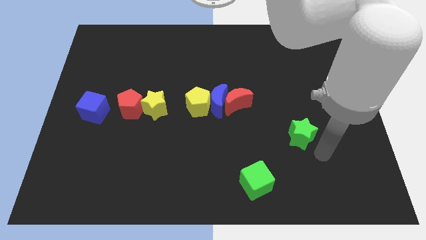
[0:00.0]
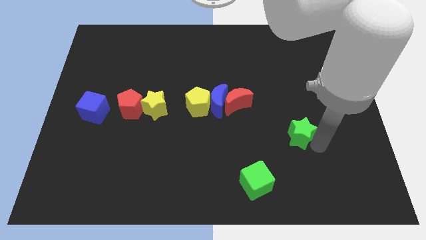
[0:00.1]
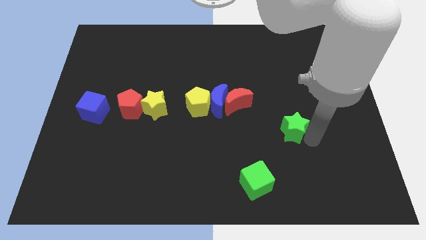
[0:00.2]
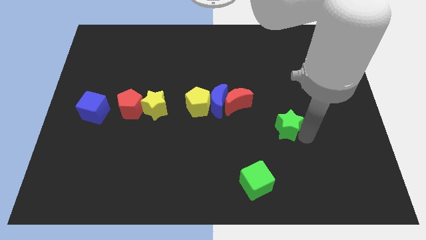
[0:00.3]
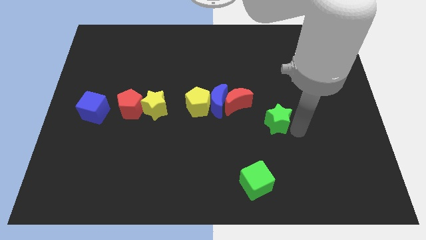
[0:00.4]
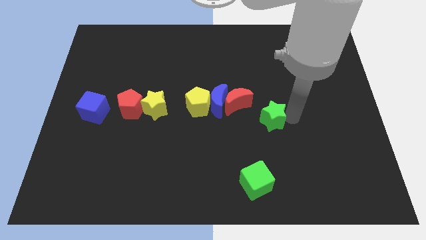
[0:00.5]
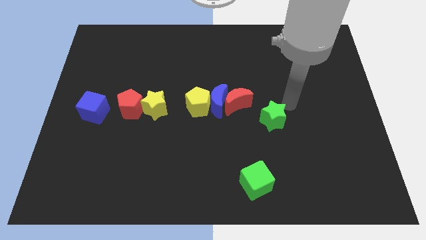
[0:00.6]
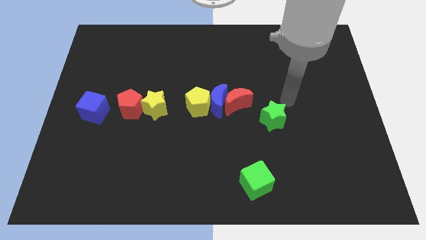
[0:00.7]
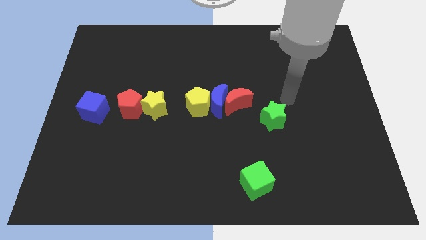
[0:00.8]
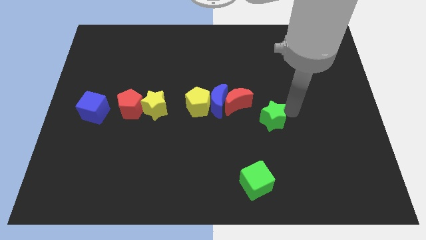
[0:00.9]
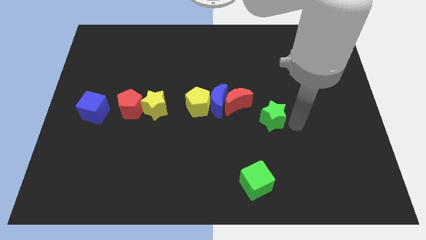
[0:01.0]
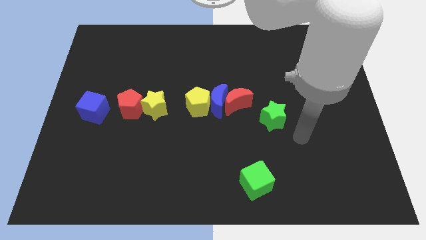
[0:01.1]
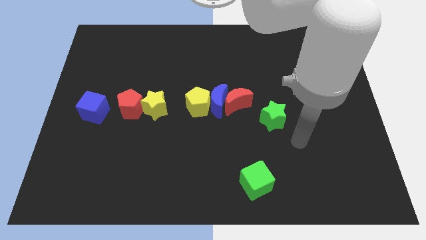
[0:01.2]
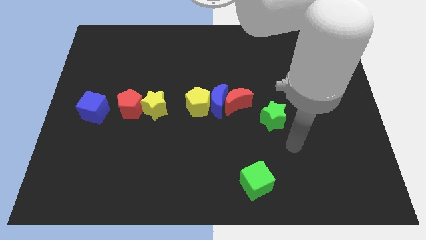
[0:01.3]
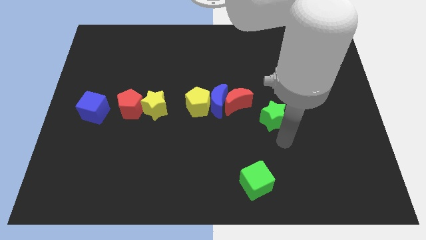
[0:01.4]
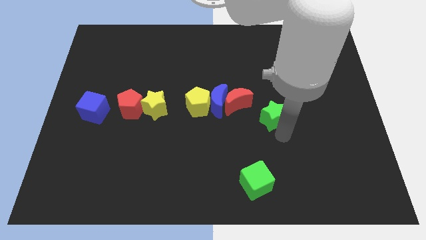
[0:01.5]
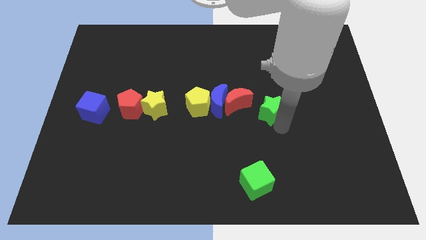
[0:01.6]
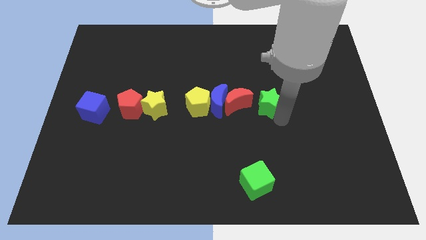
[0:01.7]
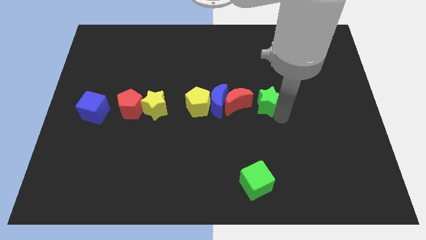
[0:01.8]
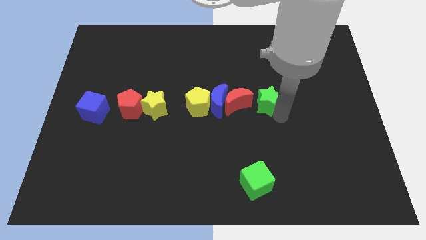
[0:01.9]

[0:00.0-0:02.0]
slide the green star to the right of the red moon

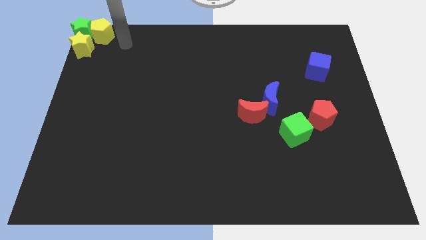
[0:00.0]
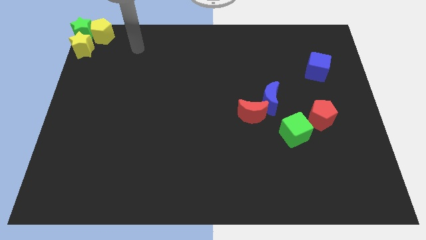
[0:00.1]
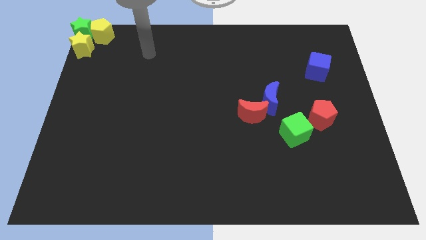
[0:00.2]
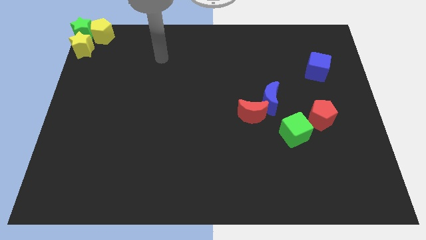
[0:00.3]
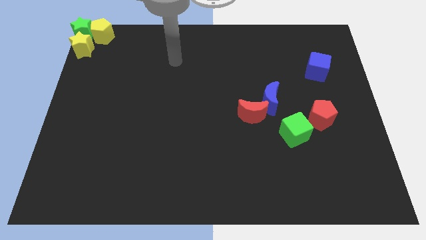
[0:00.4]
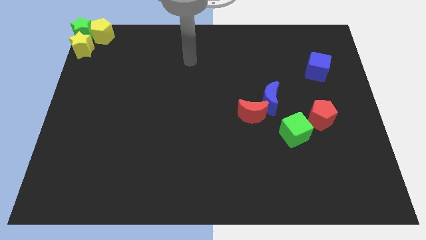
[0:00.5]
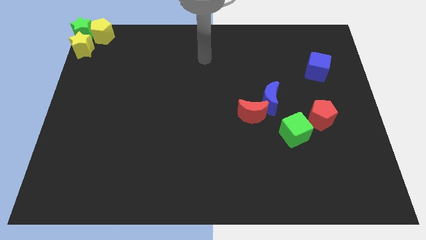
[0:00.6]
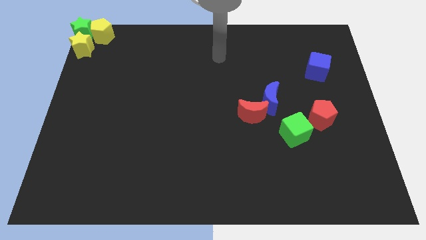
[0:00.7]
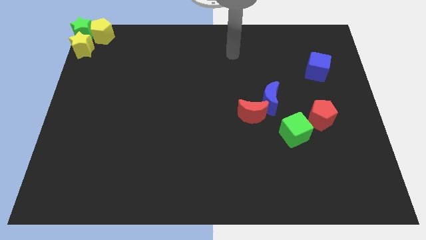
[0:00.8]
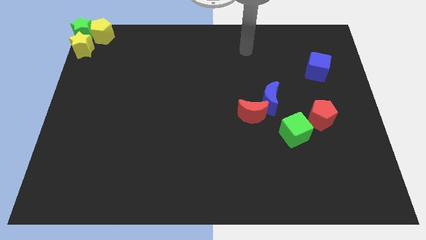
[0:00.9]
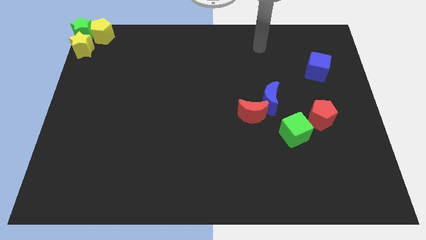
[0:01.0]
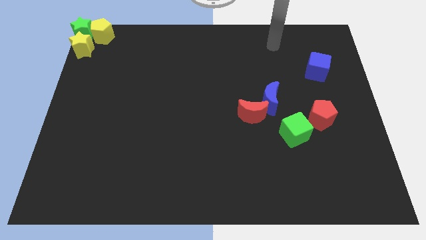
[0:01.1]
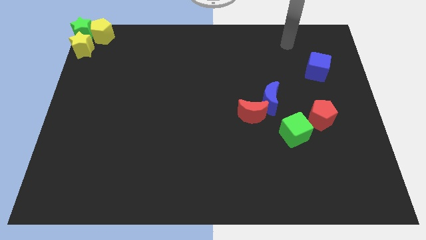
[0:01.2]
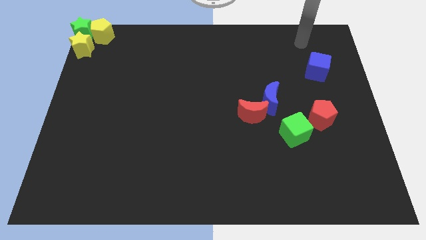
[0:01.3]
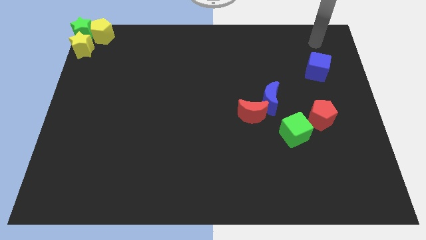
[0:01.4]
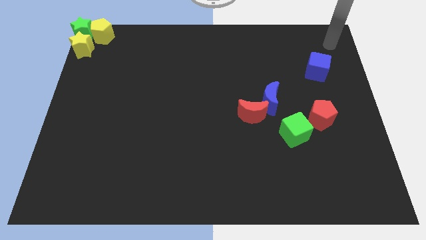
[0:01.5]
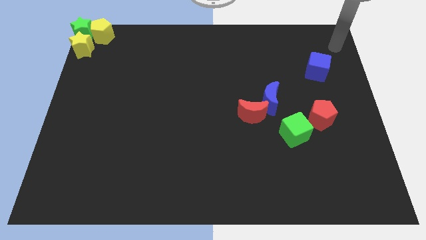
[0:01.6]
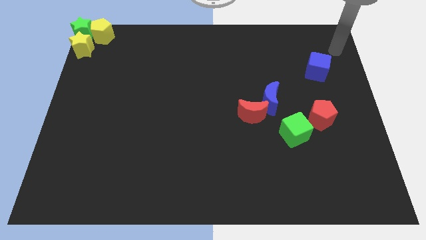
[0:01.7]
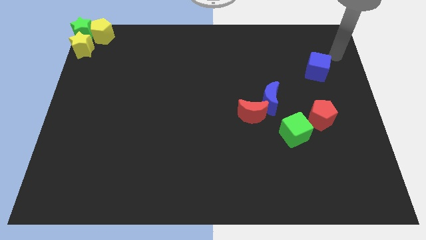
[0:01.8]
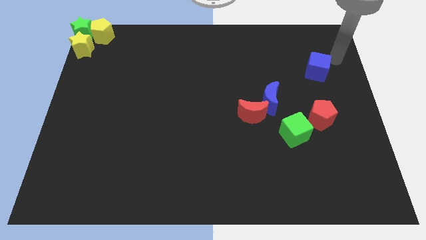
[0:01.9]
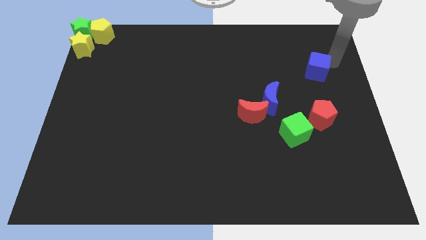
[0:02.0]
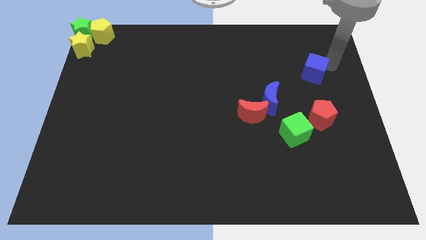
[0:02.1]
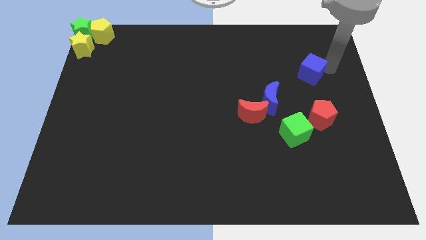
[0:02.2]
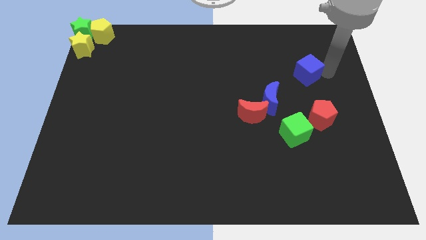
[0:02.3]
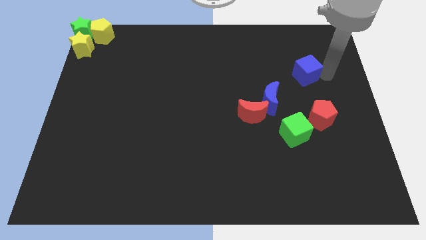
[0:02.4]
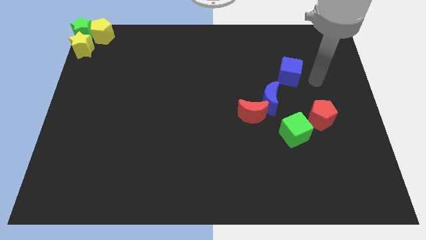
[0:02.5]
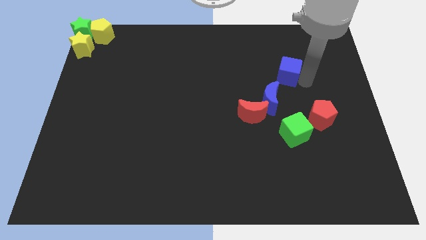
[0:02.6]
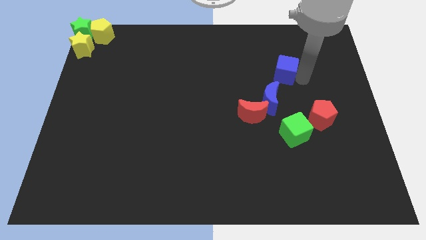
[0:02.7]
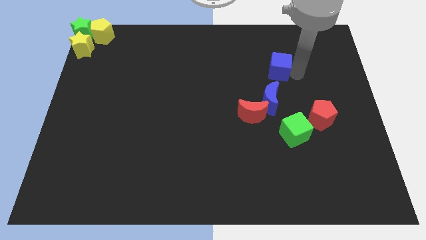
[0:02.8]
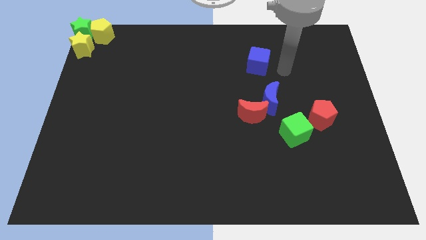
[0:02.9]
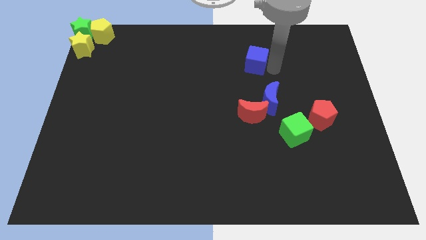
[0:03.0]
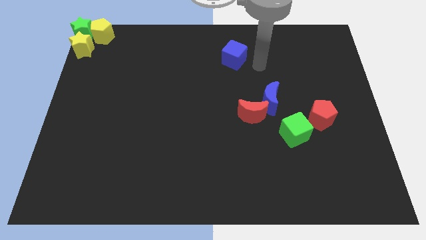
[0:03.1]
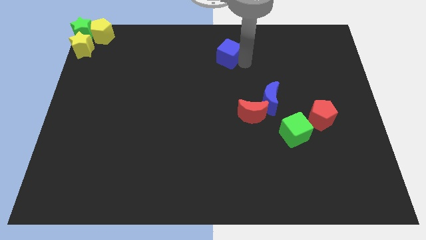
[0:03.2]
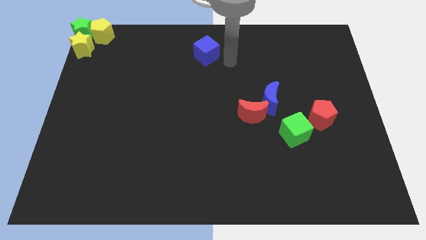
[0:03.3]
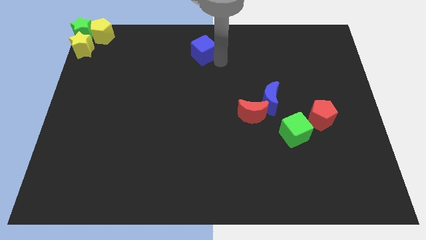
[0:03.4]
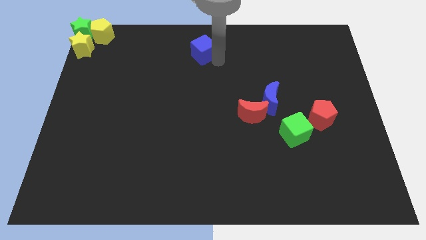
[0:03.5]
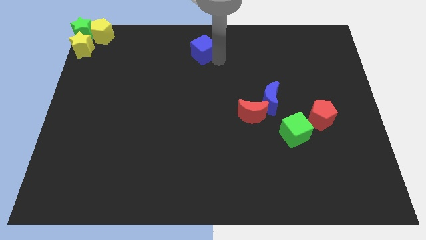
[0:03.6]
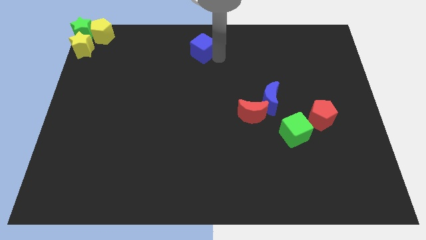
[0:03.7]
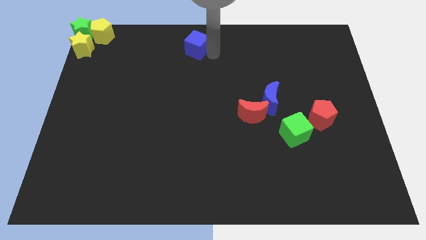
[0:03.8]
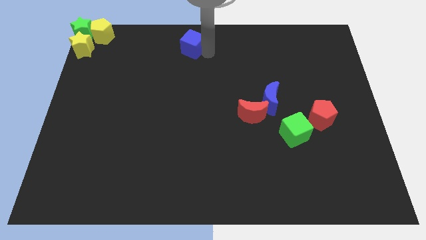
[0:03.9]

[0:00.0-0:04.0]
push the blue cube to the top side of the table

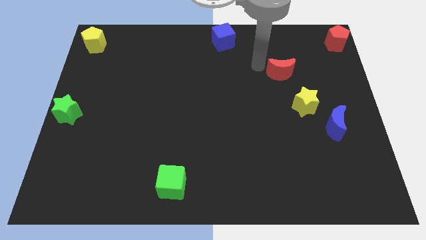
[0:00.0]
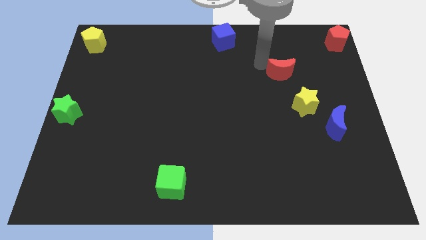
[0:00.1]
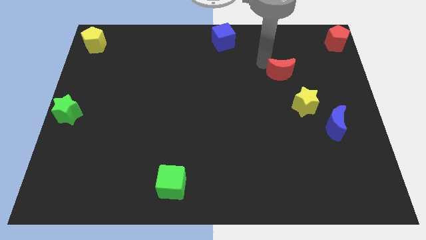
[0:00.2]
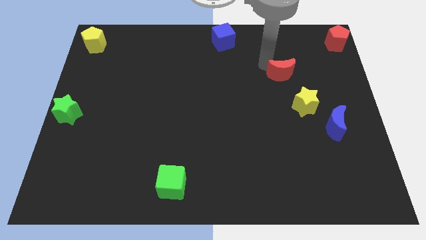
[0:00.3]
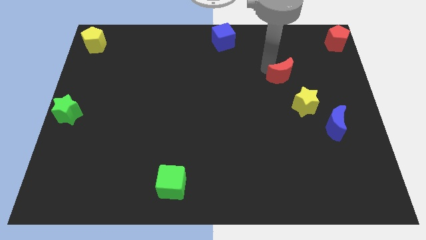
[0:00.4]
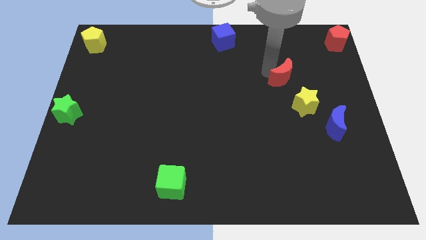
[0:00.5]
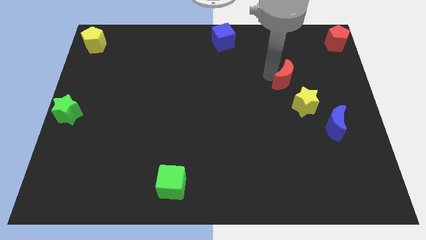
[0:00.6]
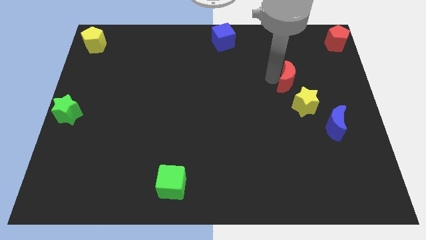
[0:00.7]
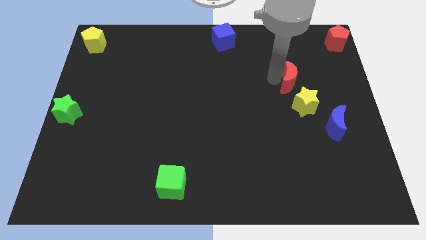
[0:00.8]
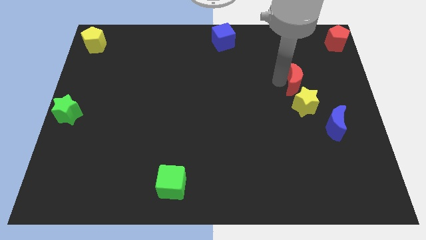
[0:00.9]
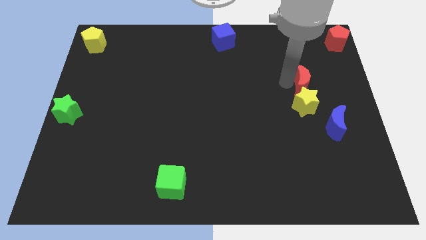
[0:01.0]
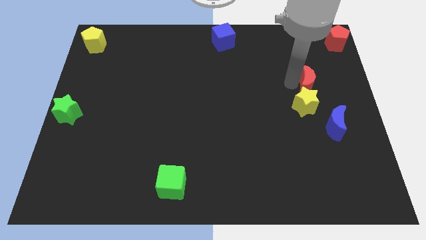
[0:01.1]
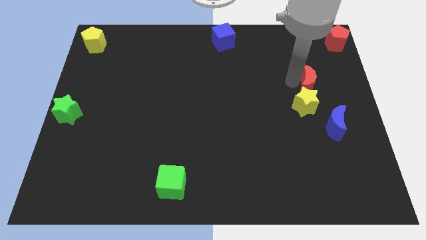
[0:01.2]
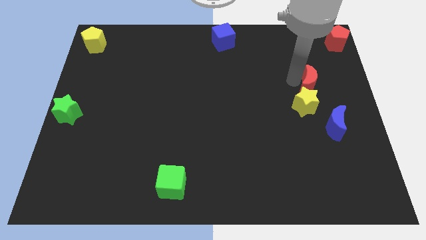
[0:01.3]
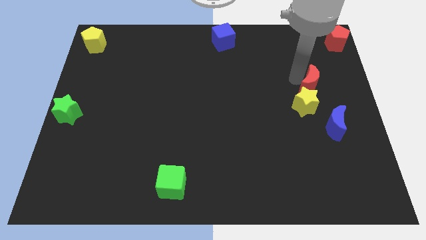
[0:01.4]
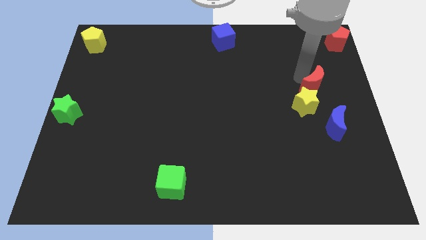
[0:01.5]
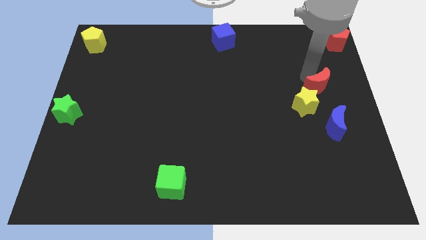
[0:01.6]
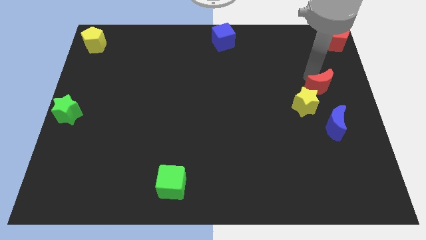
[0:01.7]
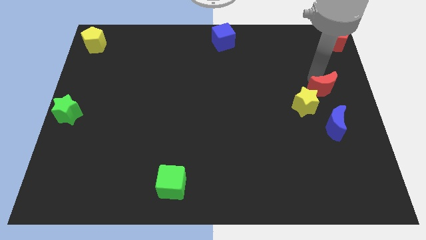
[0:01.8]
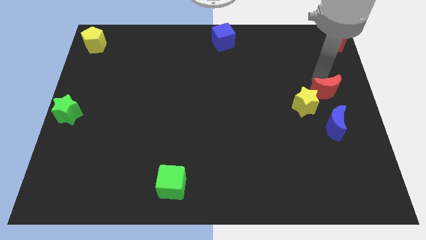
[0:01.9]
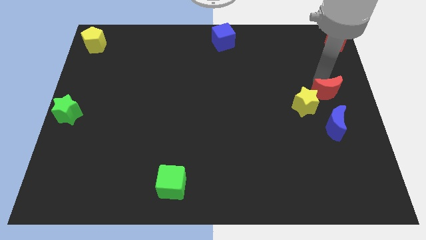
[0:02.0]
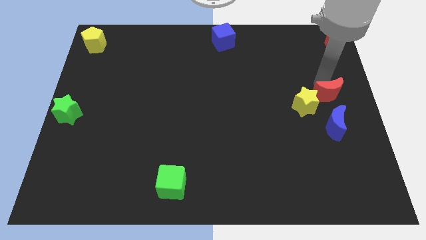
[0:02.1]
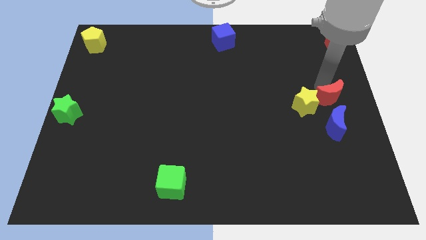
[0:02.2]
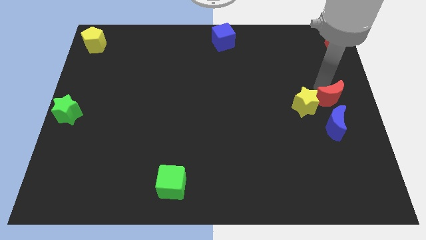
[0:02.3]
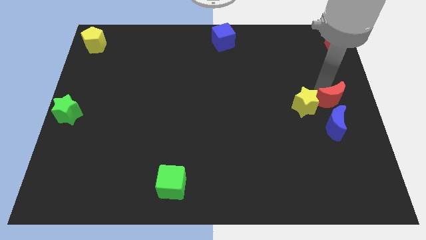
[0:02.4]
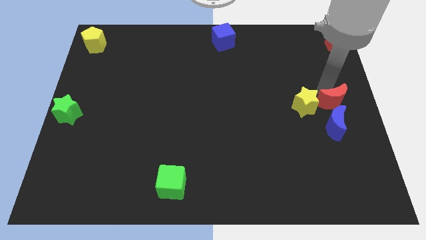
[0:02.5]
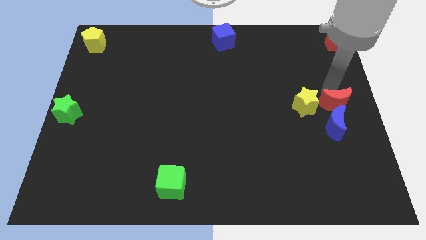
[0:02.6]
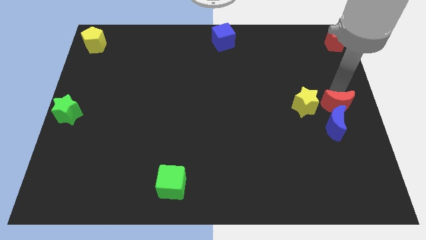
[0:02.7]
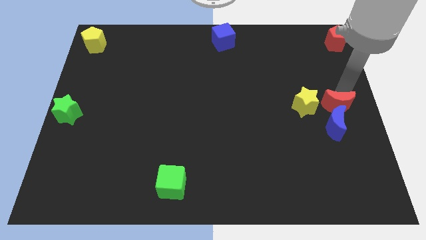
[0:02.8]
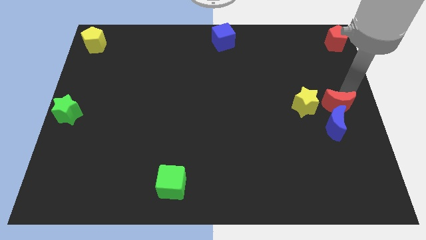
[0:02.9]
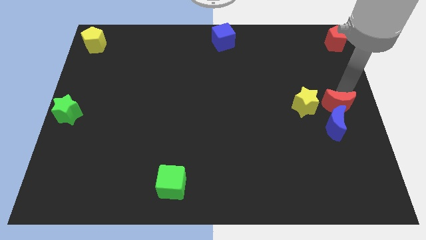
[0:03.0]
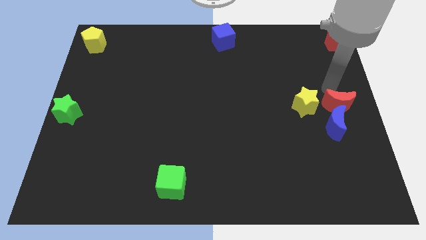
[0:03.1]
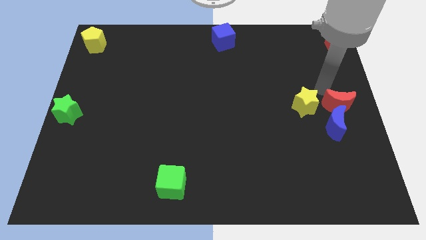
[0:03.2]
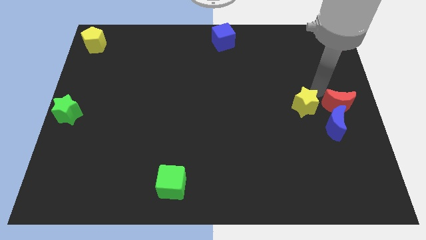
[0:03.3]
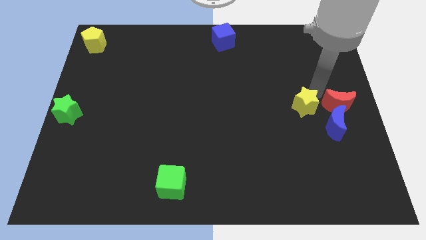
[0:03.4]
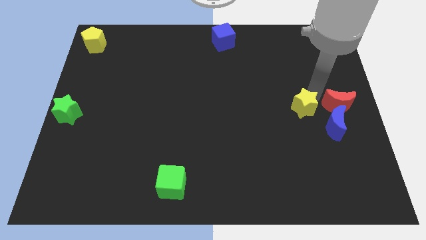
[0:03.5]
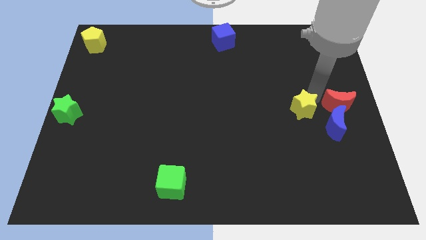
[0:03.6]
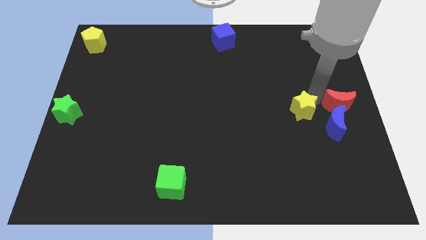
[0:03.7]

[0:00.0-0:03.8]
drag red moon towards blue moon
